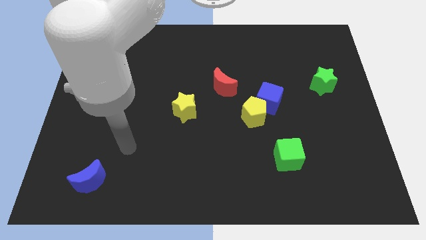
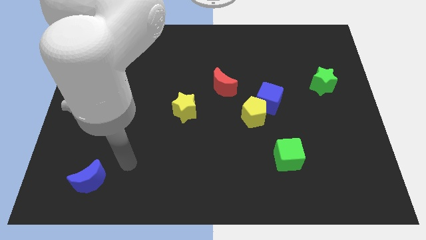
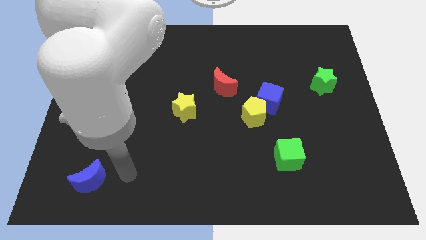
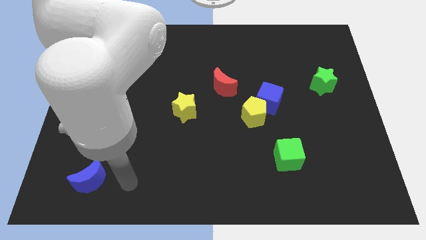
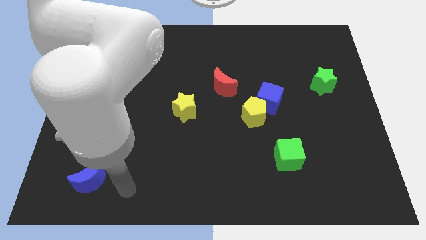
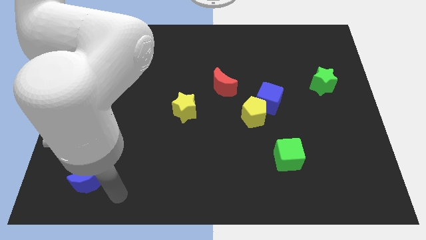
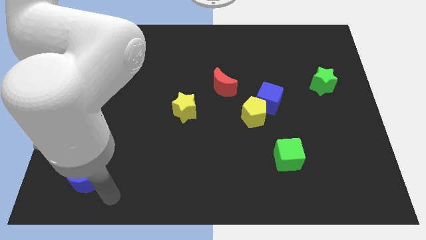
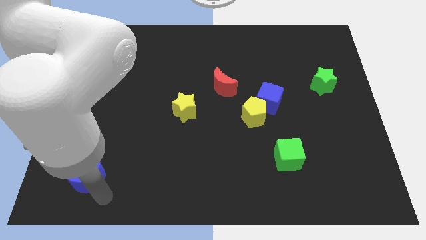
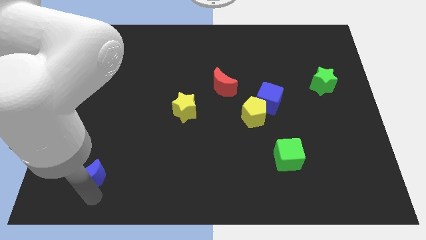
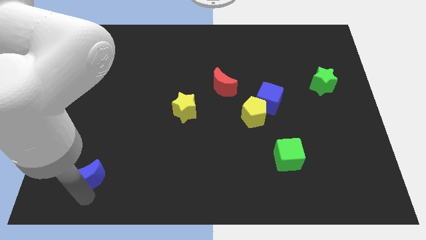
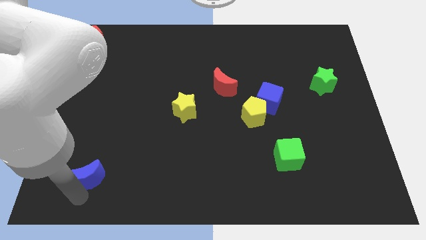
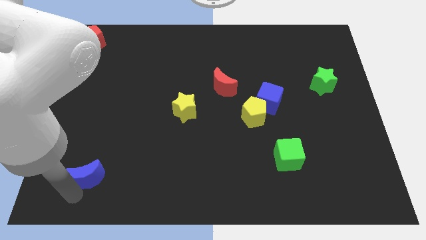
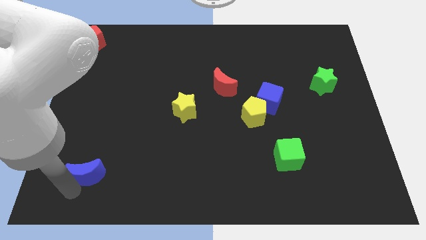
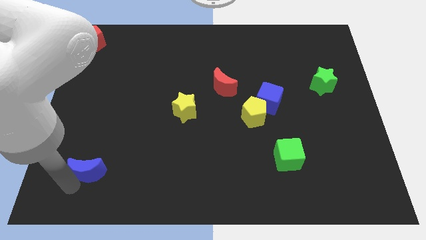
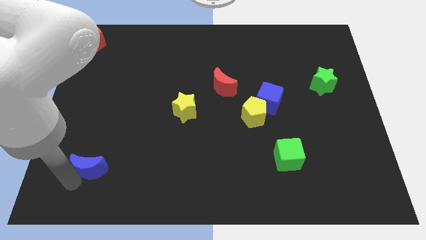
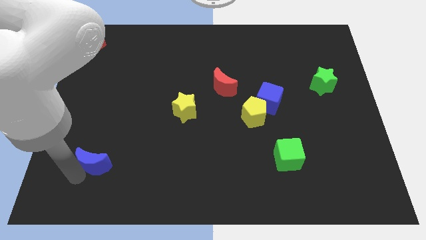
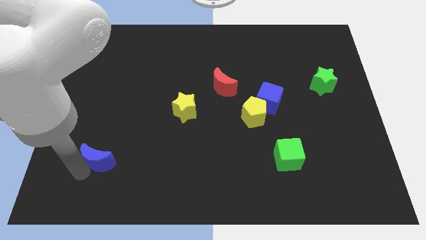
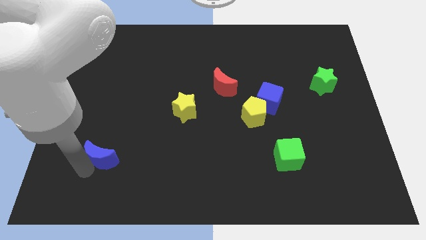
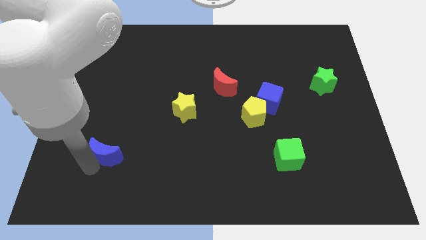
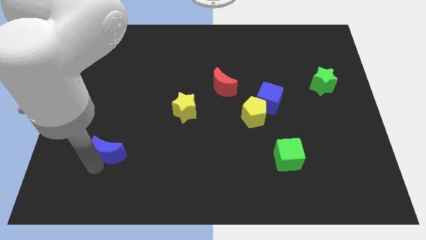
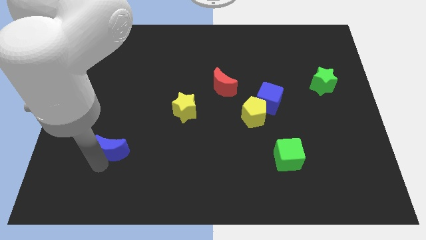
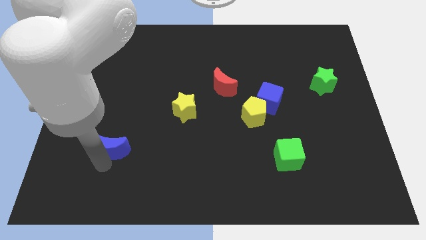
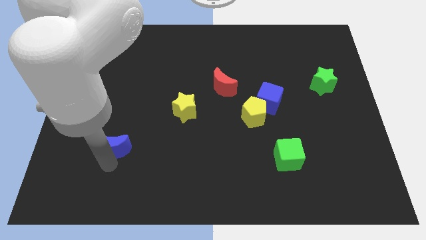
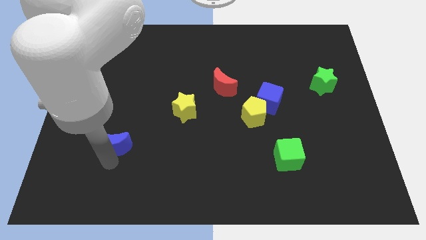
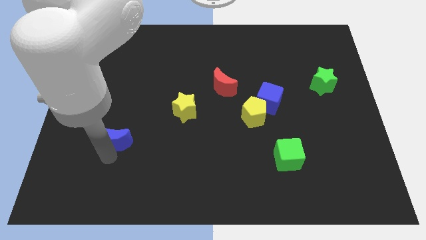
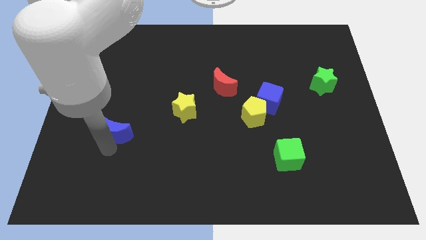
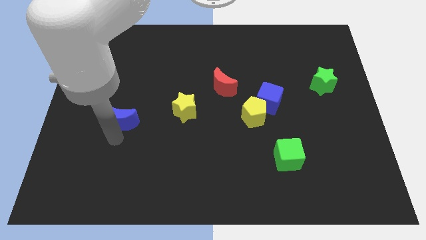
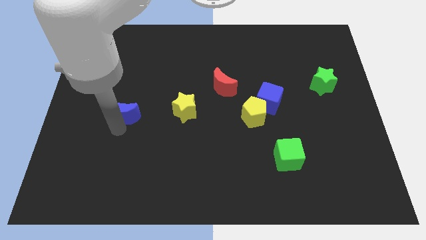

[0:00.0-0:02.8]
place blue moon to the left of yellow star

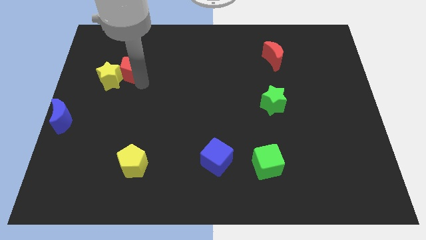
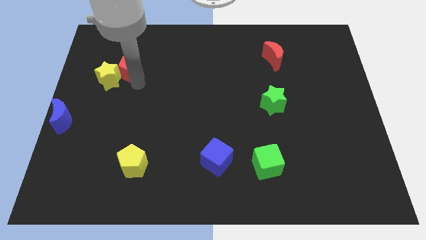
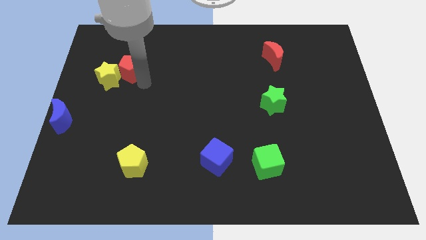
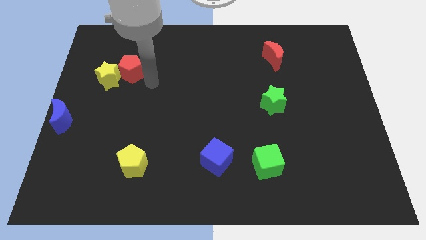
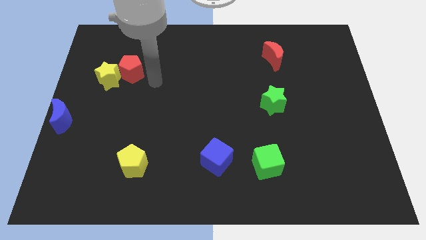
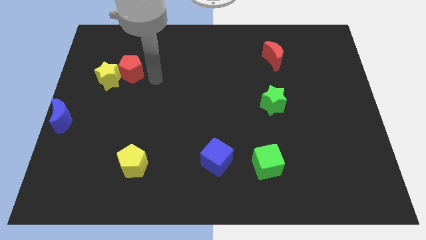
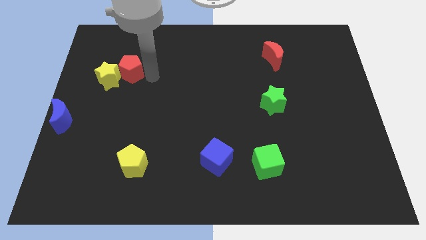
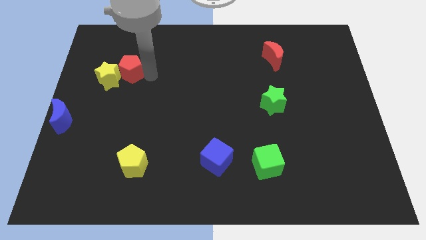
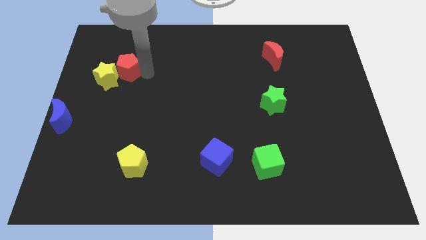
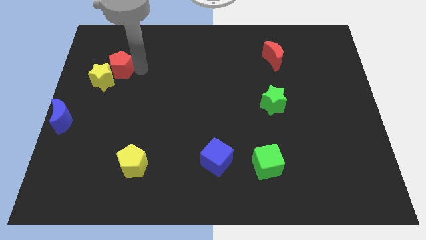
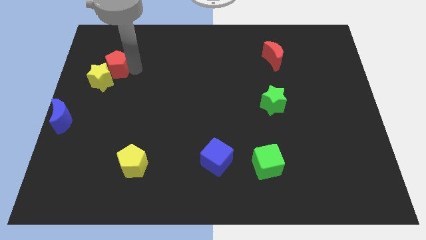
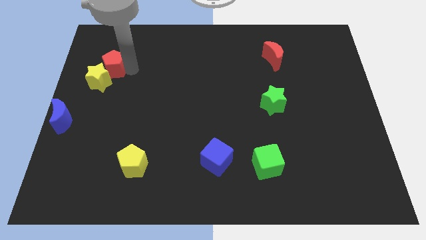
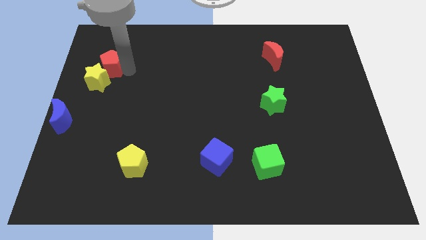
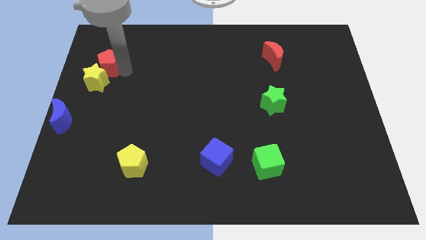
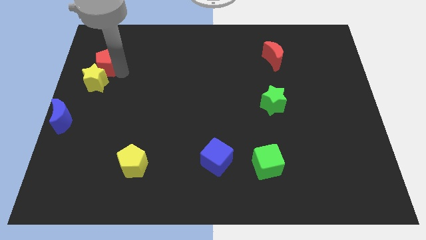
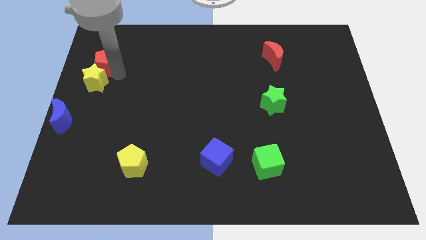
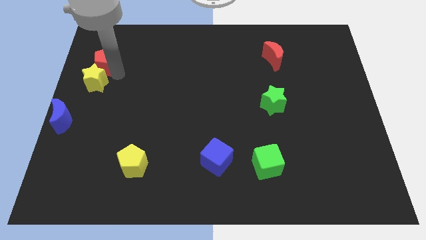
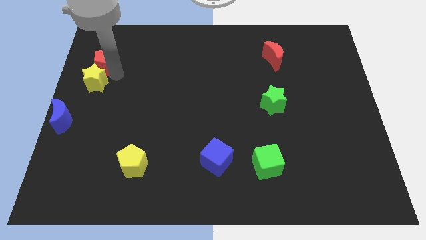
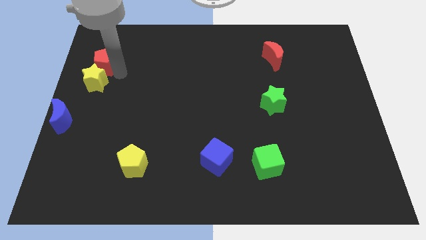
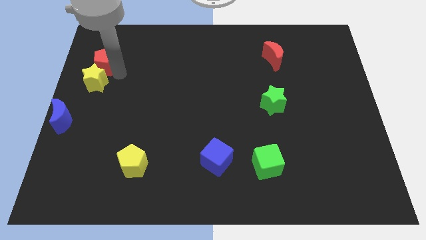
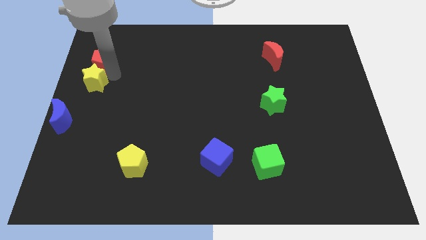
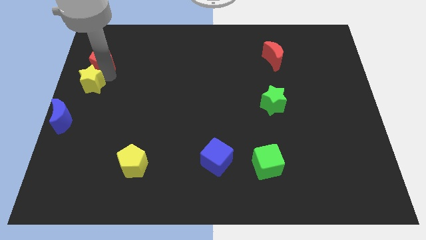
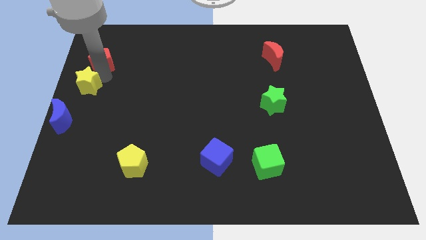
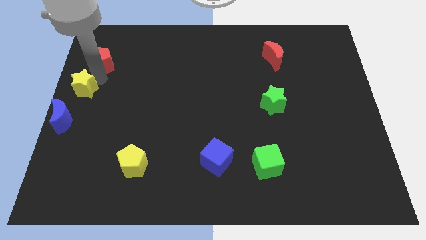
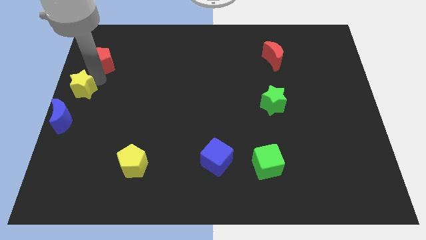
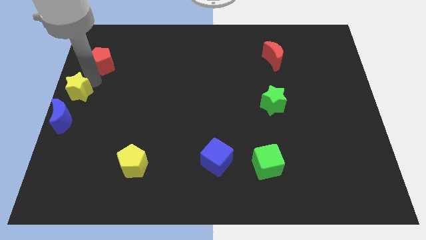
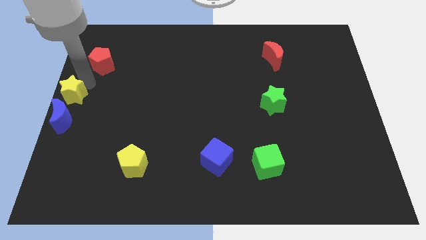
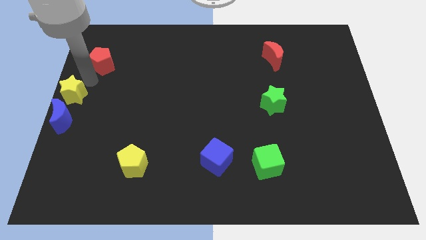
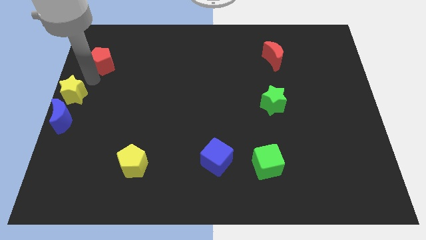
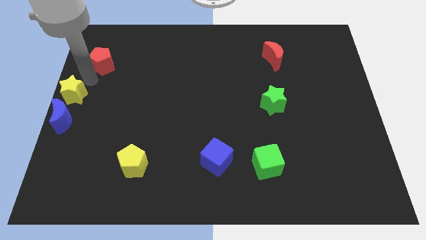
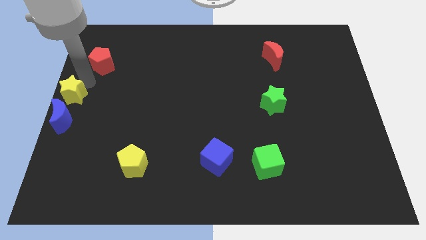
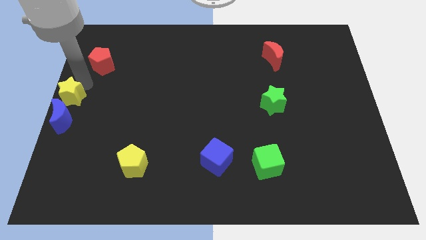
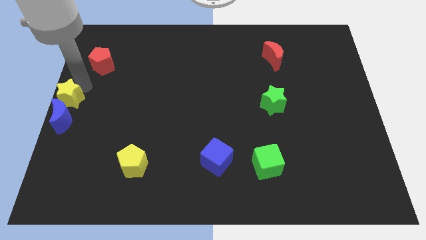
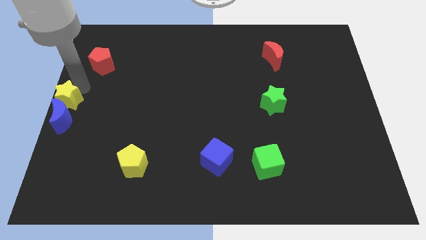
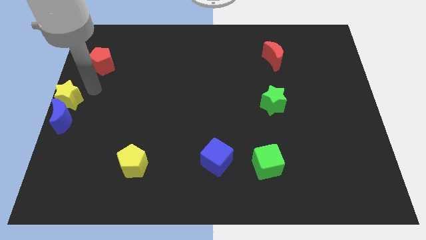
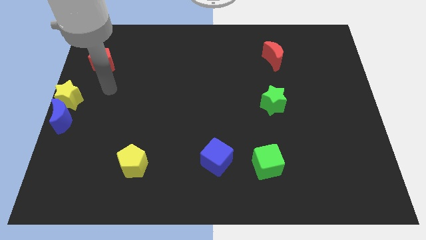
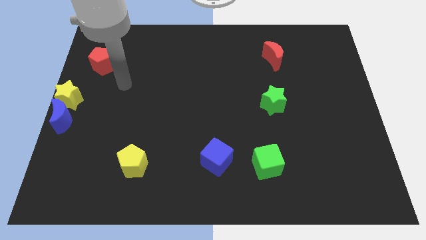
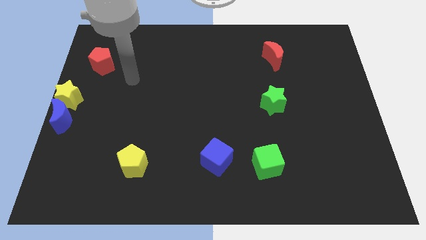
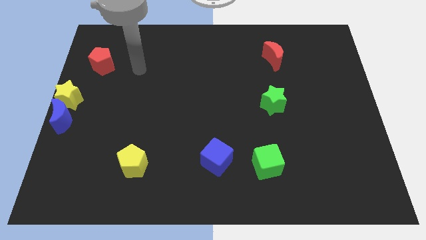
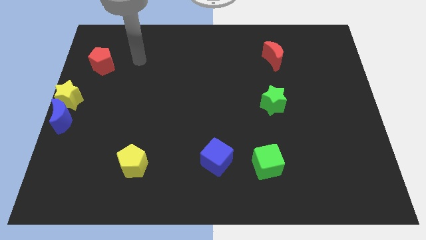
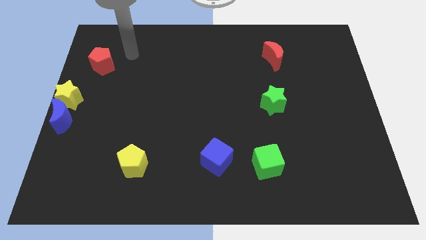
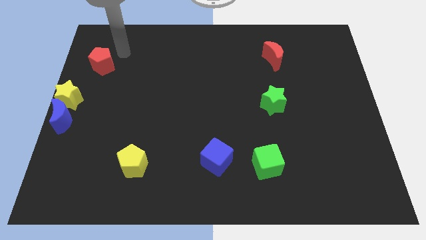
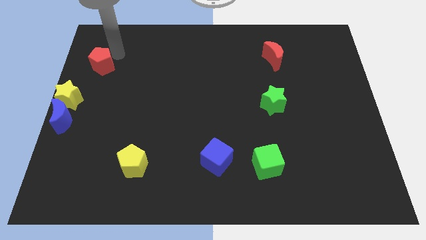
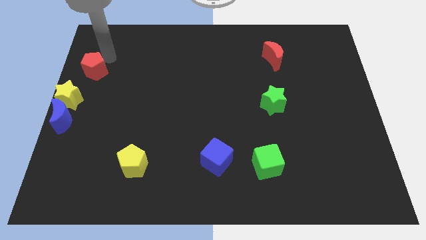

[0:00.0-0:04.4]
place the yellow star above the blue crescent

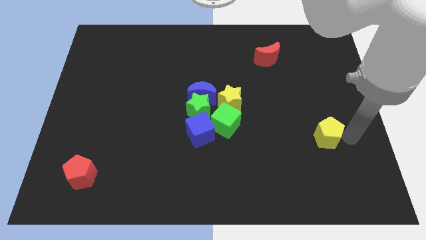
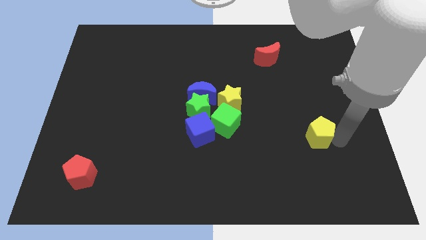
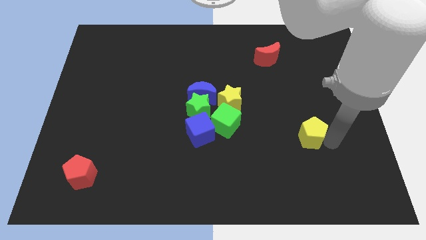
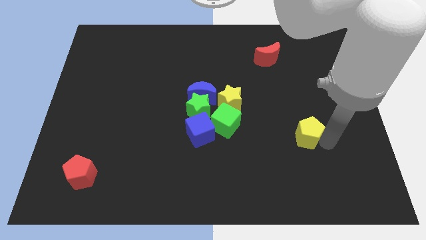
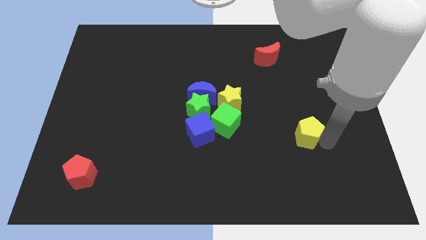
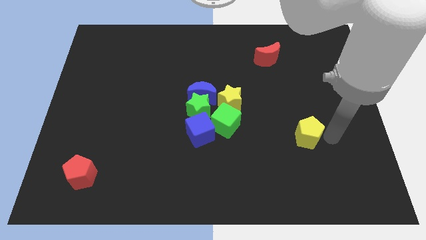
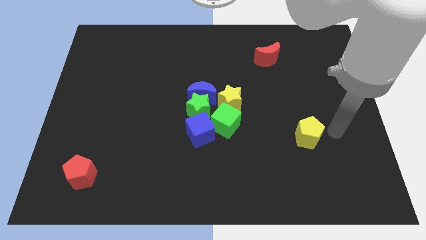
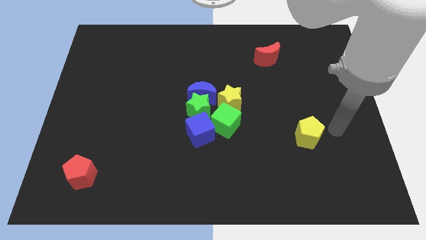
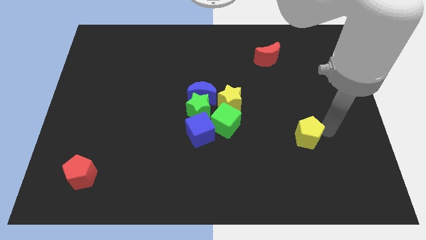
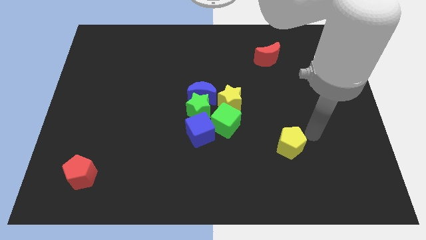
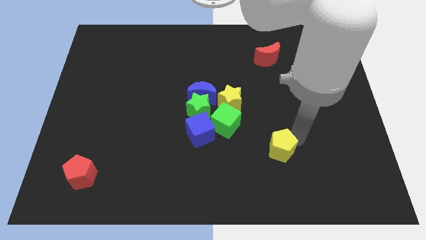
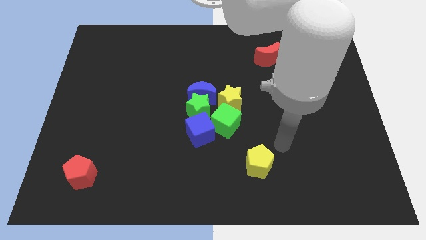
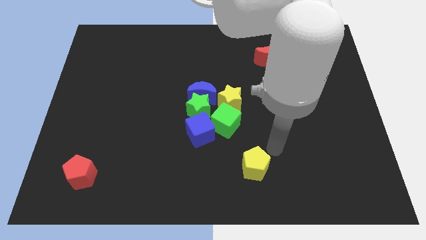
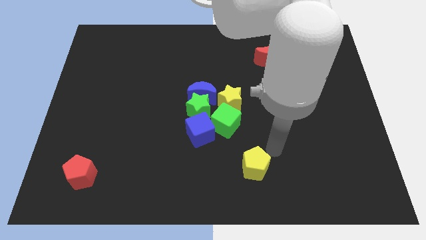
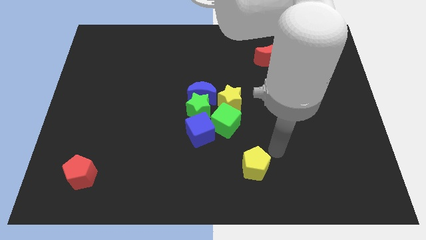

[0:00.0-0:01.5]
push the yellow pentagon to the bottom side of the board

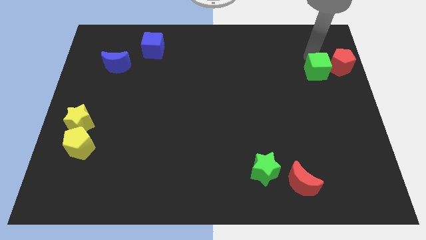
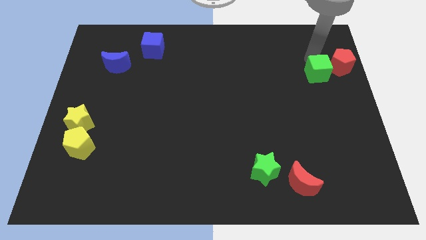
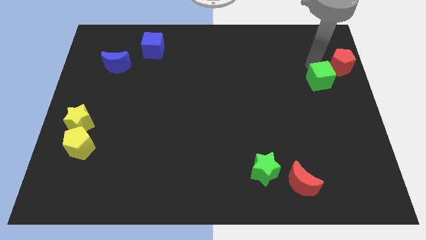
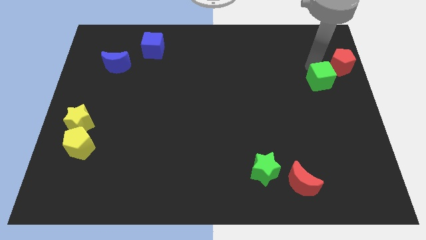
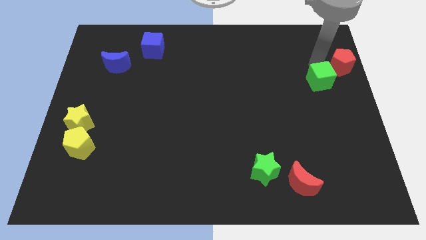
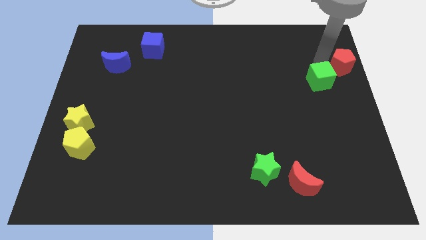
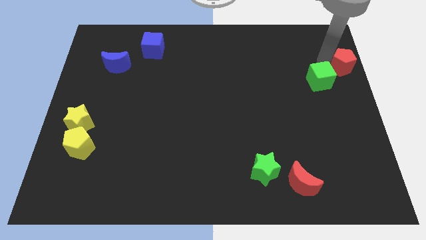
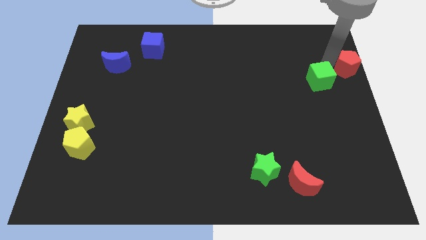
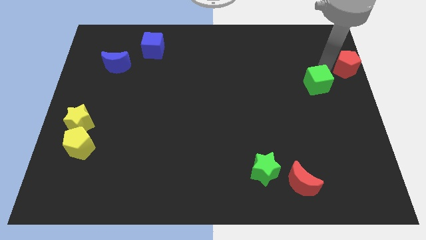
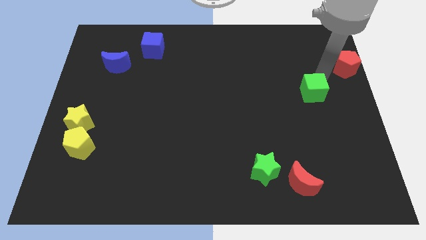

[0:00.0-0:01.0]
separate the green cube and red pentagon
